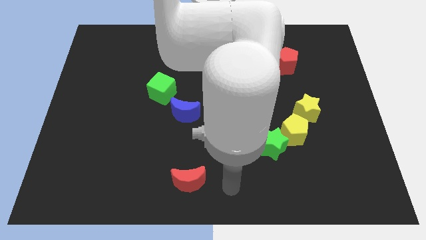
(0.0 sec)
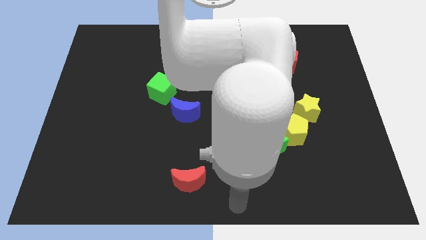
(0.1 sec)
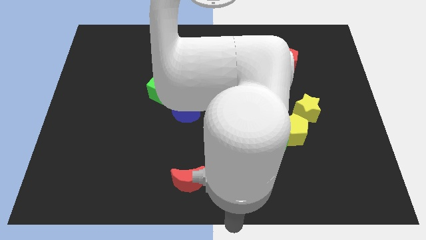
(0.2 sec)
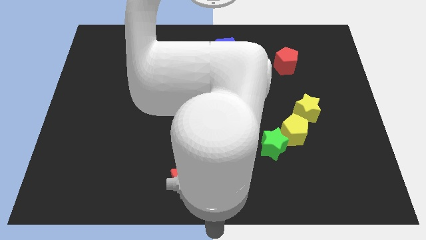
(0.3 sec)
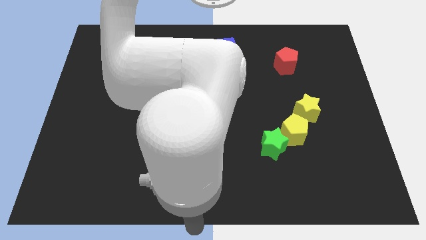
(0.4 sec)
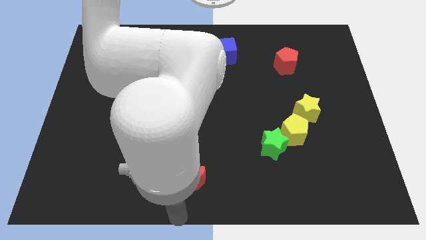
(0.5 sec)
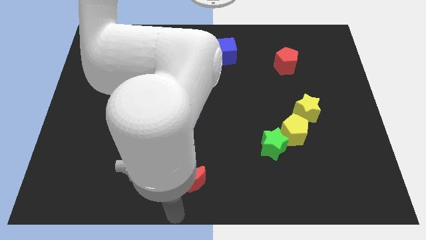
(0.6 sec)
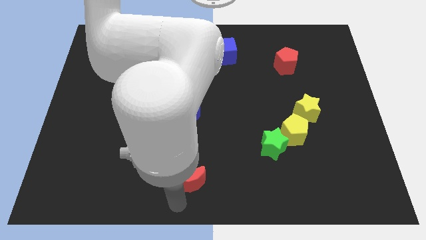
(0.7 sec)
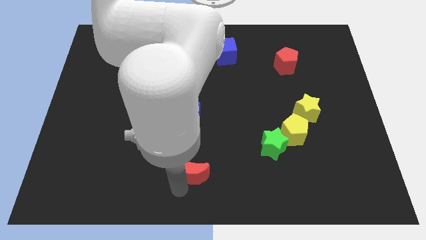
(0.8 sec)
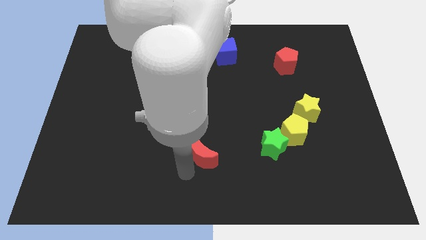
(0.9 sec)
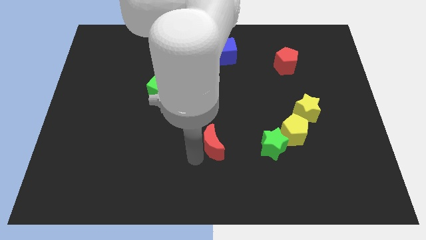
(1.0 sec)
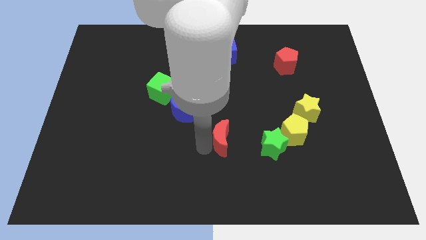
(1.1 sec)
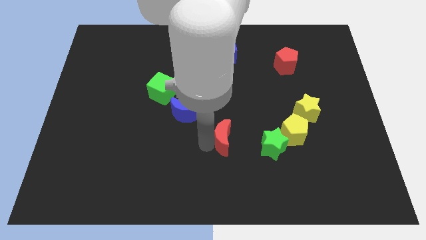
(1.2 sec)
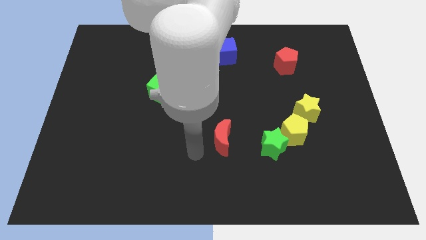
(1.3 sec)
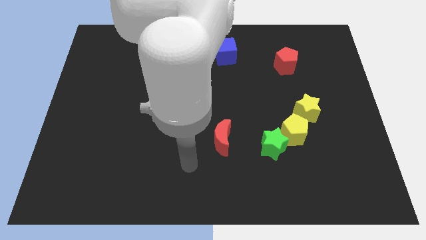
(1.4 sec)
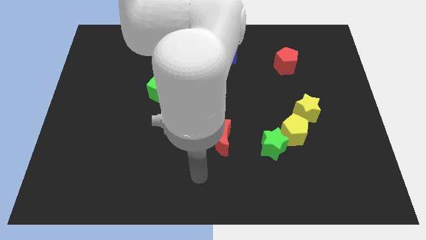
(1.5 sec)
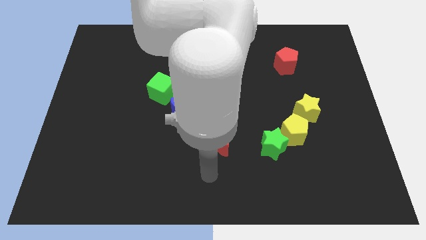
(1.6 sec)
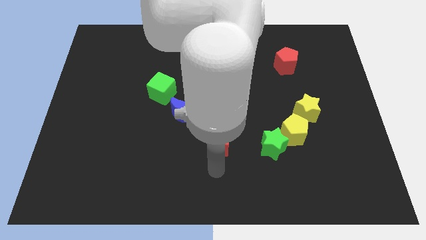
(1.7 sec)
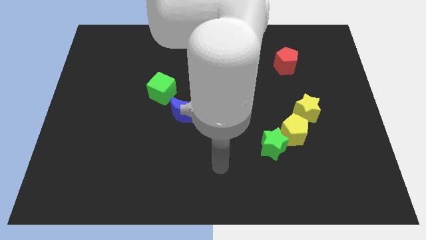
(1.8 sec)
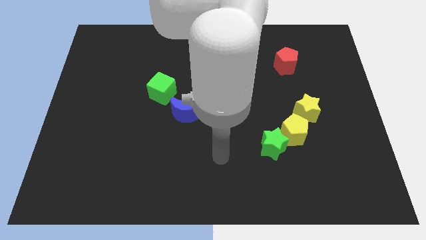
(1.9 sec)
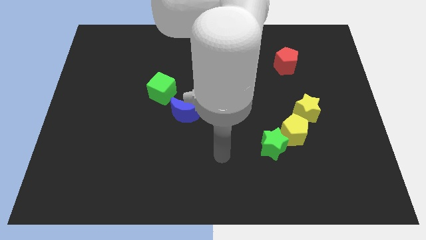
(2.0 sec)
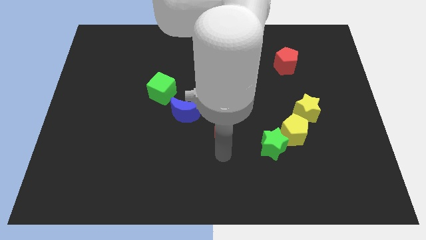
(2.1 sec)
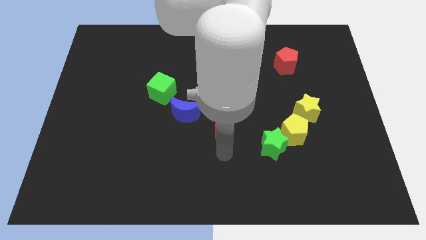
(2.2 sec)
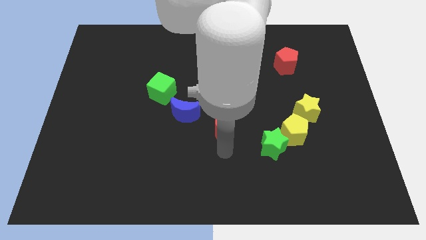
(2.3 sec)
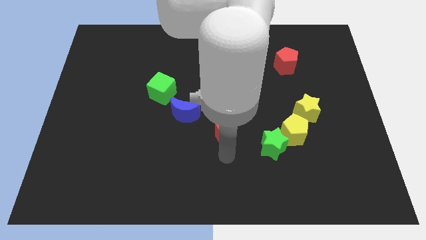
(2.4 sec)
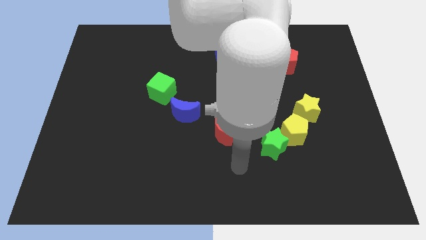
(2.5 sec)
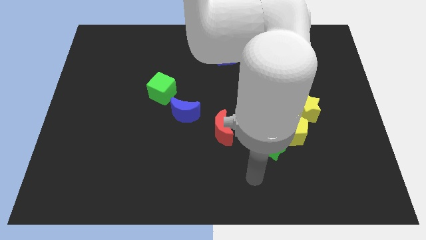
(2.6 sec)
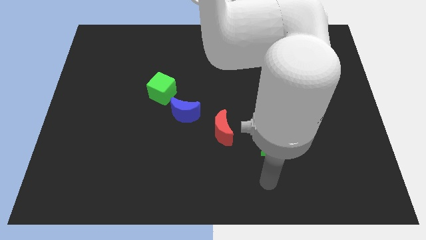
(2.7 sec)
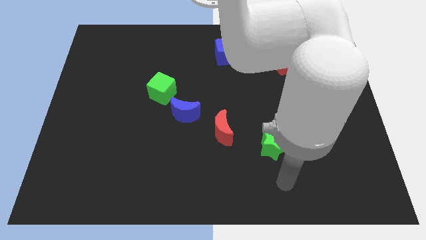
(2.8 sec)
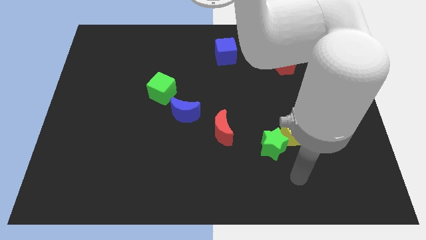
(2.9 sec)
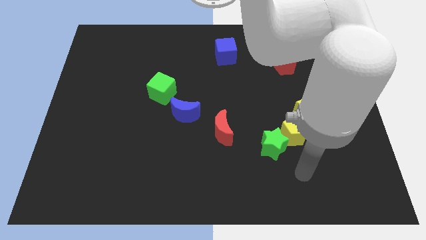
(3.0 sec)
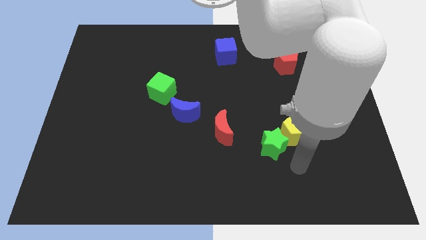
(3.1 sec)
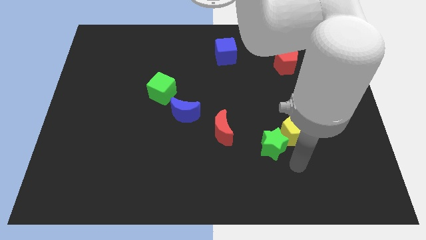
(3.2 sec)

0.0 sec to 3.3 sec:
place the red moon between the blue moon and green star

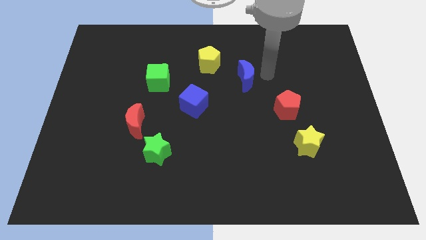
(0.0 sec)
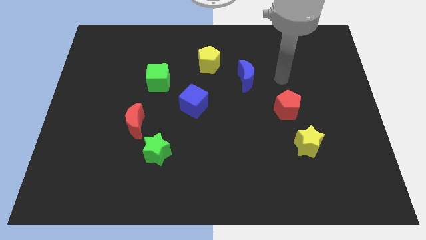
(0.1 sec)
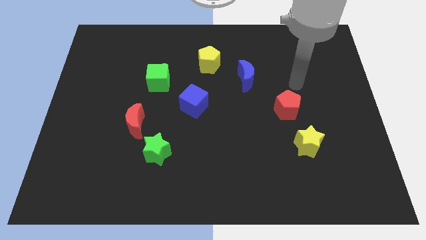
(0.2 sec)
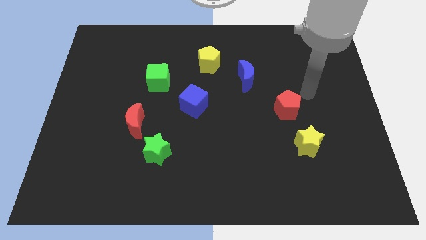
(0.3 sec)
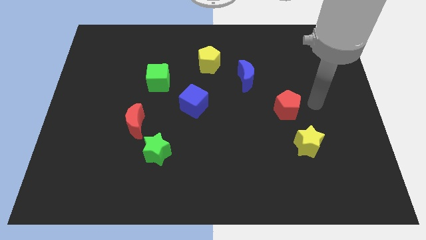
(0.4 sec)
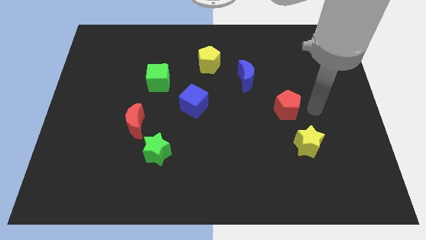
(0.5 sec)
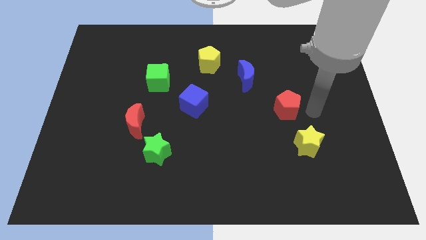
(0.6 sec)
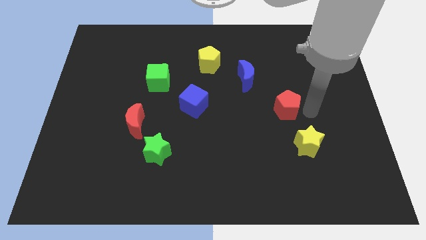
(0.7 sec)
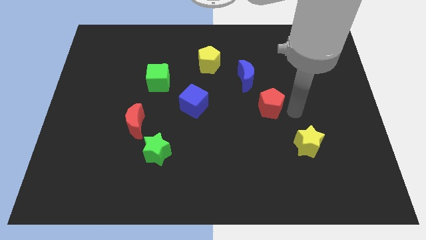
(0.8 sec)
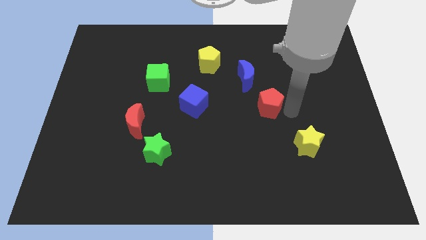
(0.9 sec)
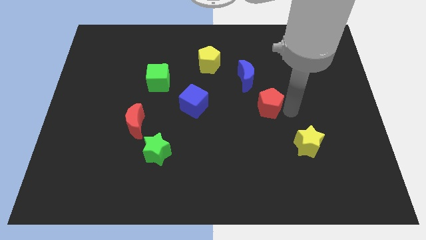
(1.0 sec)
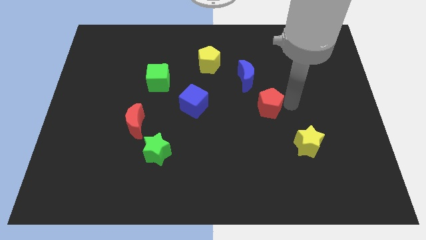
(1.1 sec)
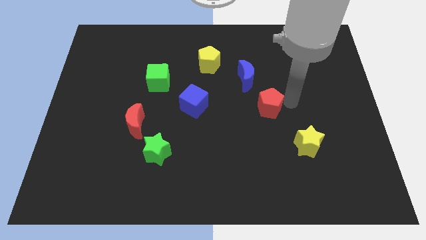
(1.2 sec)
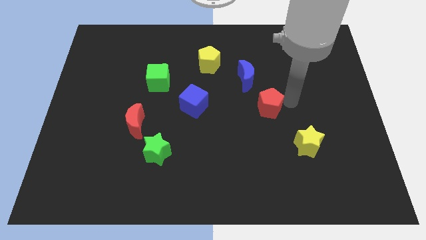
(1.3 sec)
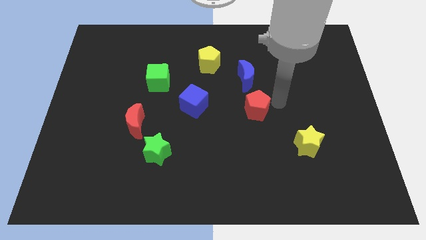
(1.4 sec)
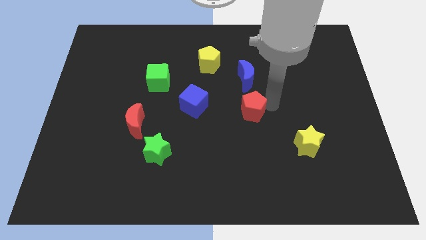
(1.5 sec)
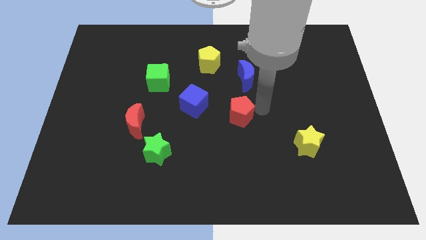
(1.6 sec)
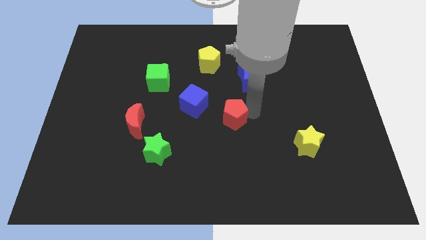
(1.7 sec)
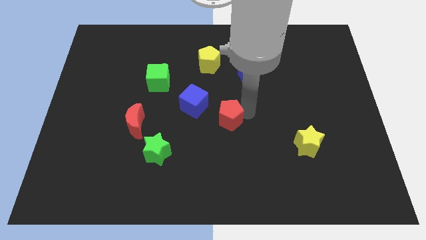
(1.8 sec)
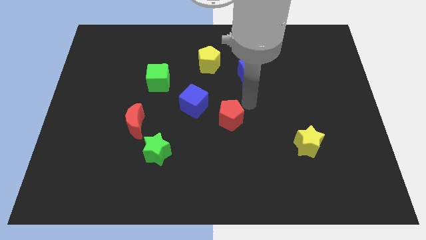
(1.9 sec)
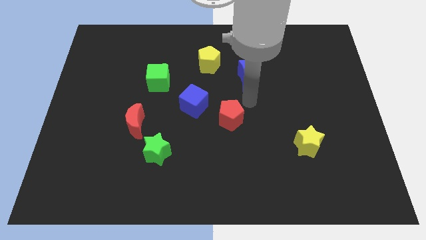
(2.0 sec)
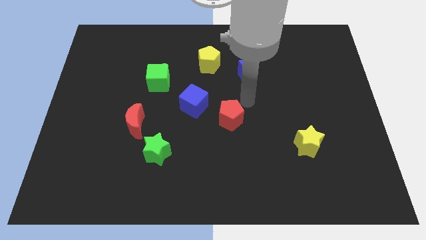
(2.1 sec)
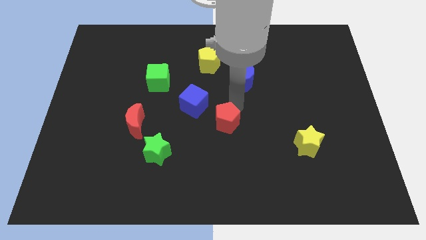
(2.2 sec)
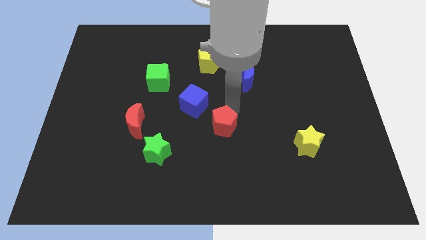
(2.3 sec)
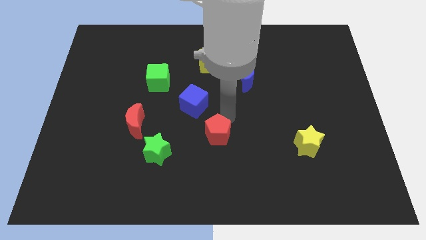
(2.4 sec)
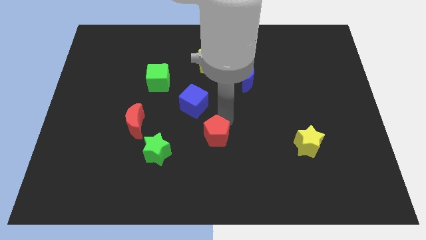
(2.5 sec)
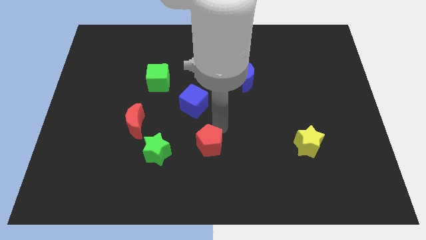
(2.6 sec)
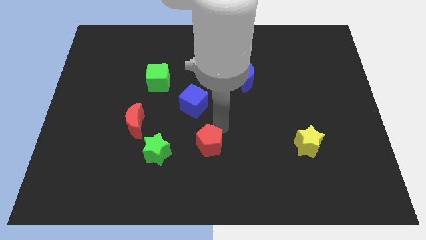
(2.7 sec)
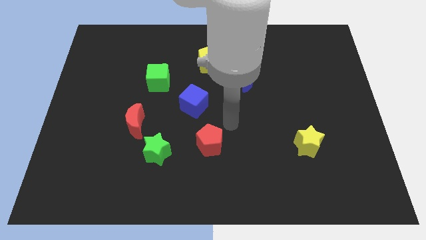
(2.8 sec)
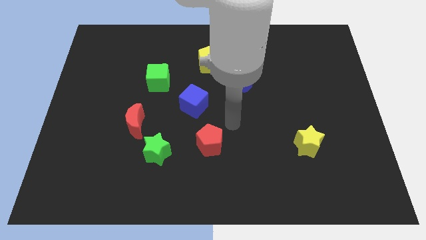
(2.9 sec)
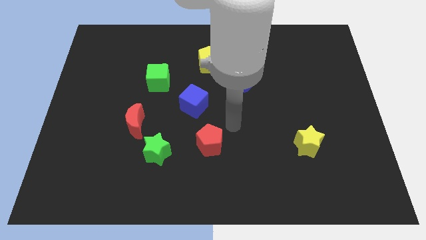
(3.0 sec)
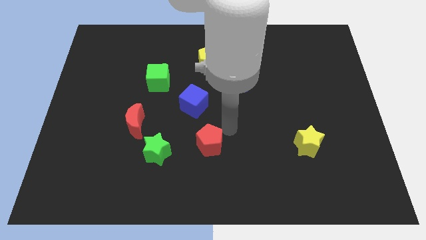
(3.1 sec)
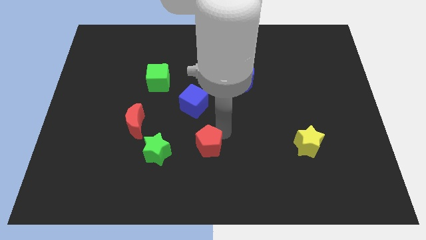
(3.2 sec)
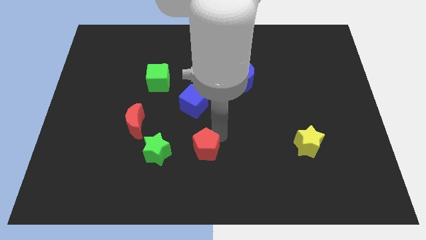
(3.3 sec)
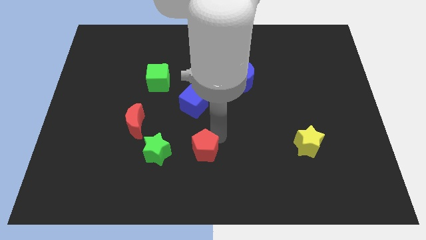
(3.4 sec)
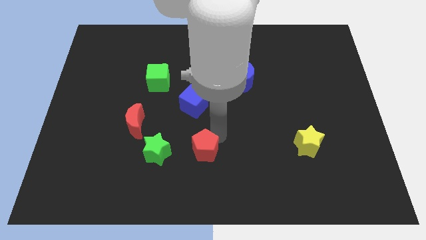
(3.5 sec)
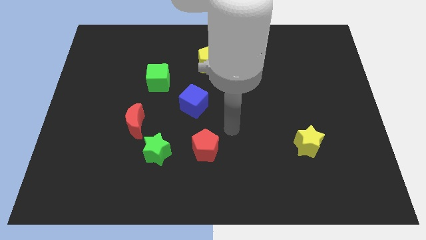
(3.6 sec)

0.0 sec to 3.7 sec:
push the red pentagon to the right of the green star

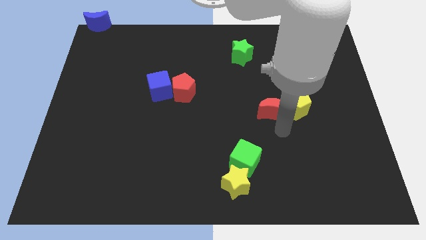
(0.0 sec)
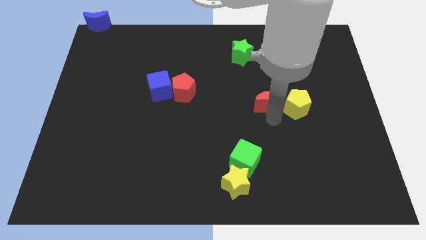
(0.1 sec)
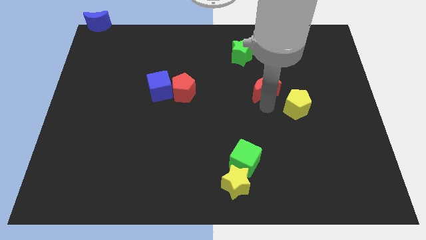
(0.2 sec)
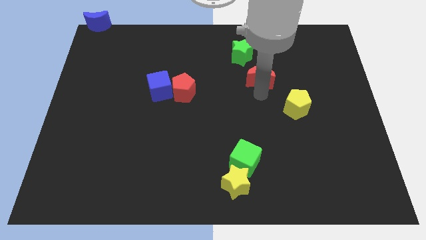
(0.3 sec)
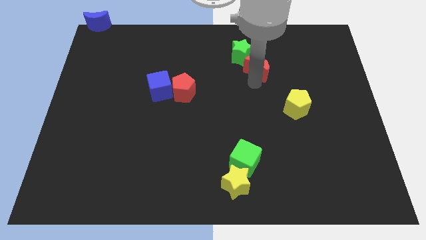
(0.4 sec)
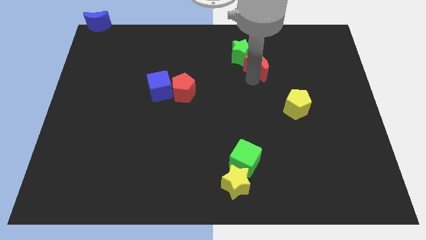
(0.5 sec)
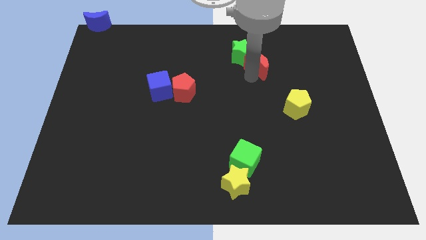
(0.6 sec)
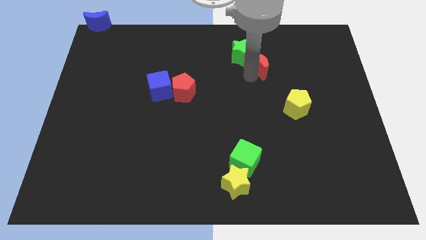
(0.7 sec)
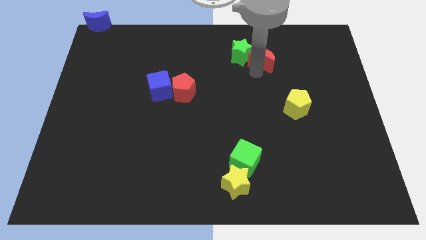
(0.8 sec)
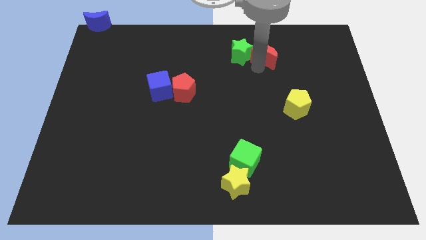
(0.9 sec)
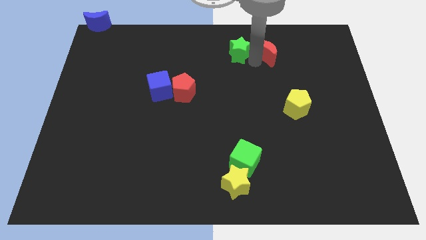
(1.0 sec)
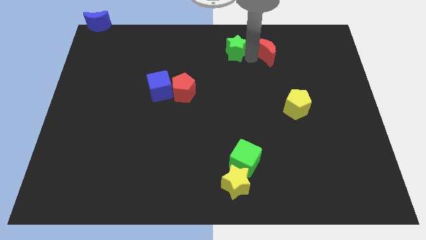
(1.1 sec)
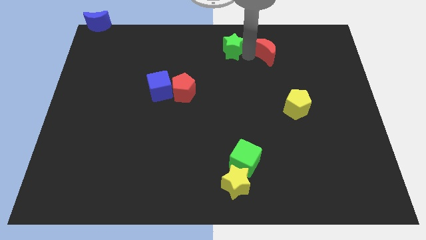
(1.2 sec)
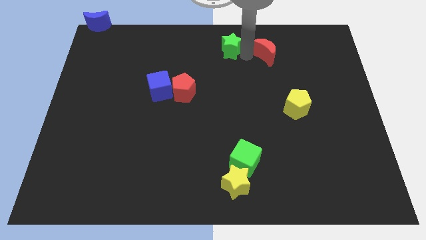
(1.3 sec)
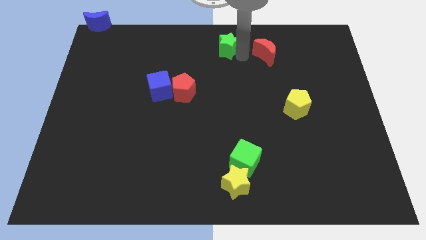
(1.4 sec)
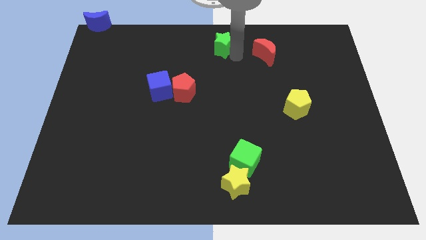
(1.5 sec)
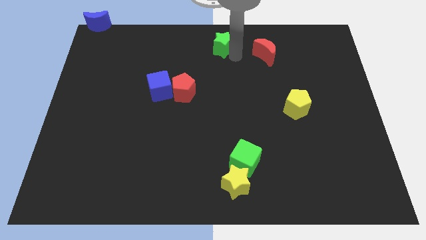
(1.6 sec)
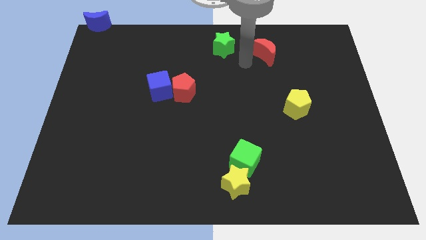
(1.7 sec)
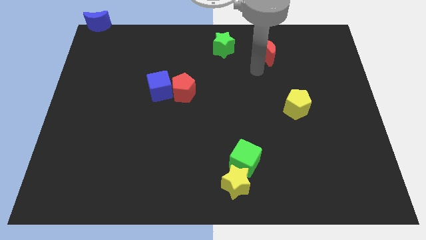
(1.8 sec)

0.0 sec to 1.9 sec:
separate red moon from the green star
